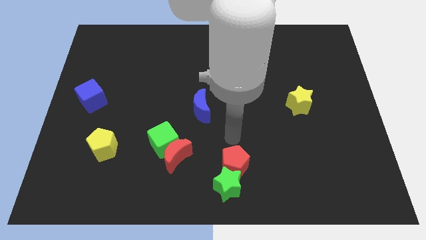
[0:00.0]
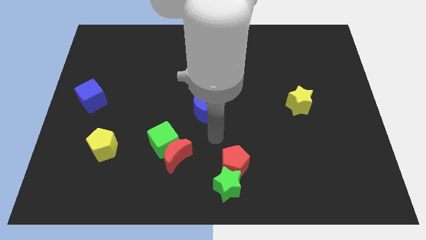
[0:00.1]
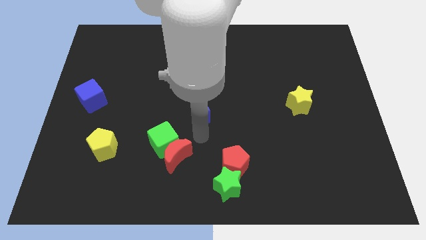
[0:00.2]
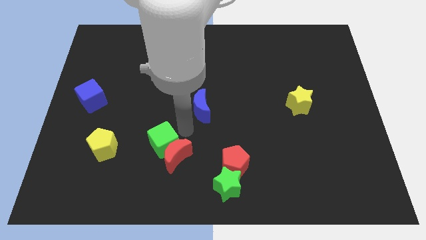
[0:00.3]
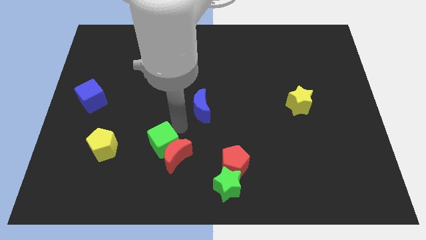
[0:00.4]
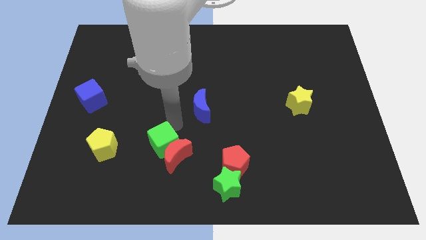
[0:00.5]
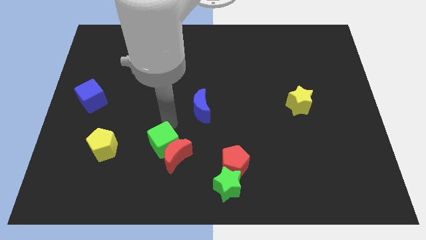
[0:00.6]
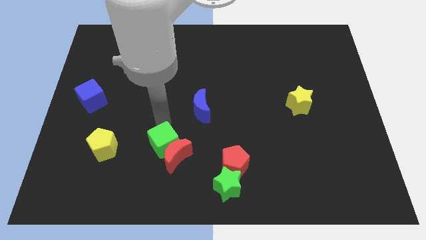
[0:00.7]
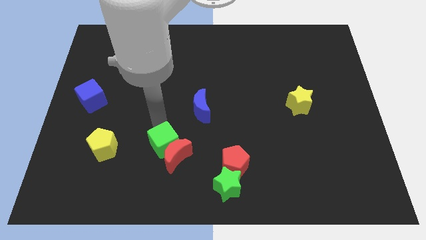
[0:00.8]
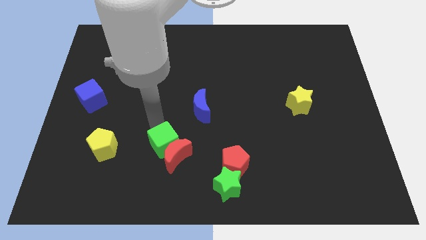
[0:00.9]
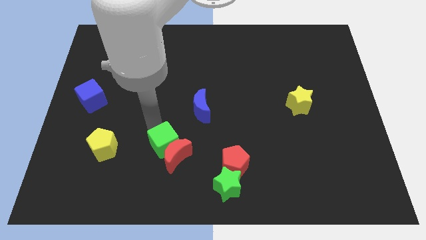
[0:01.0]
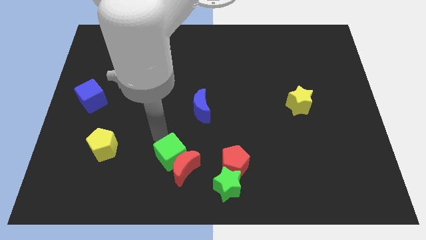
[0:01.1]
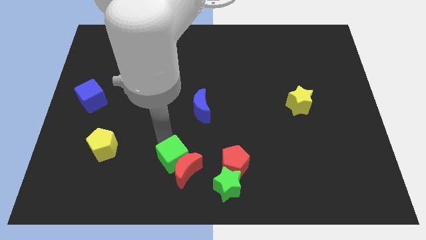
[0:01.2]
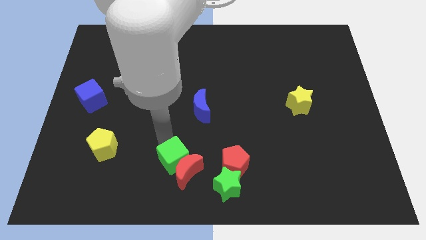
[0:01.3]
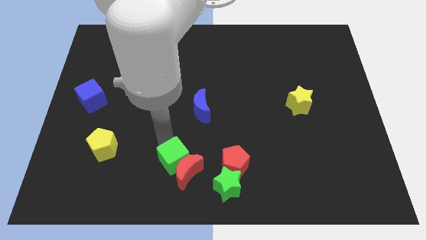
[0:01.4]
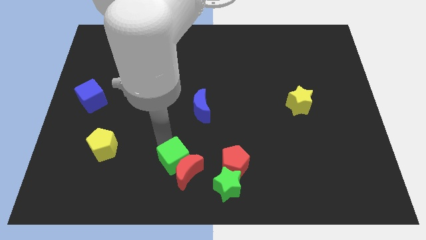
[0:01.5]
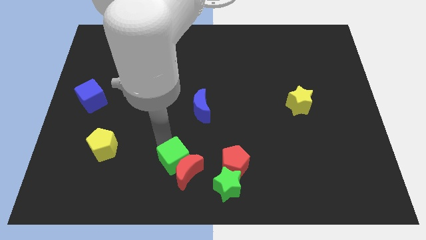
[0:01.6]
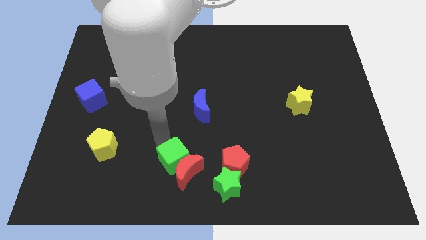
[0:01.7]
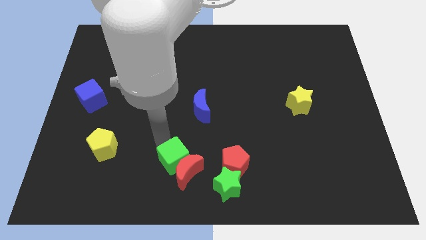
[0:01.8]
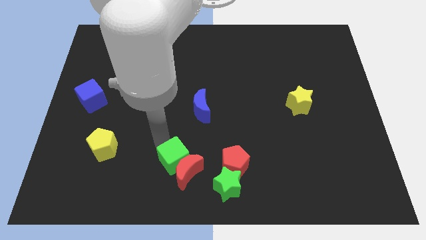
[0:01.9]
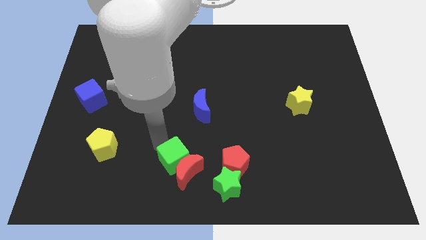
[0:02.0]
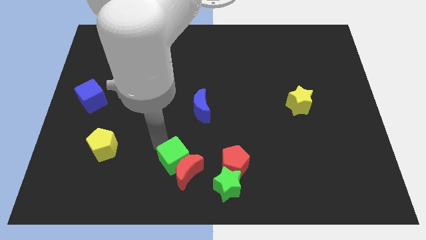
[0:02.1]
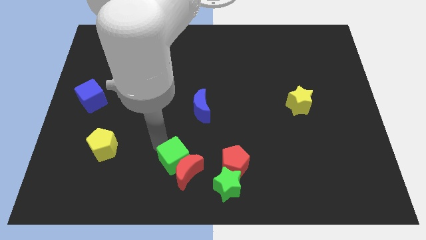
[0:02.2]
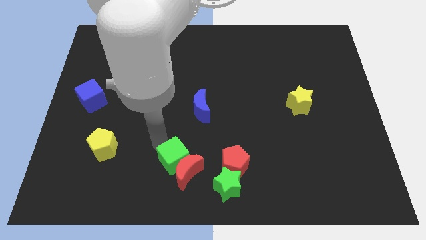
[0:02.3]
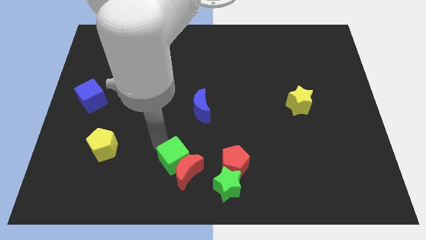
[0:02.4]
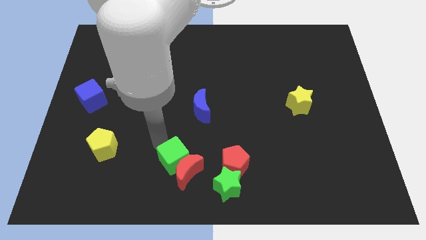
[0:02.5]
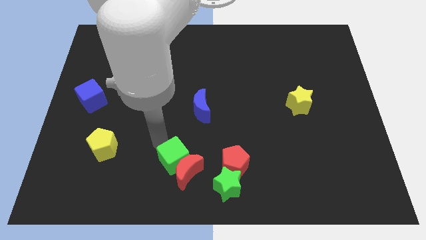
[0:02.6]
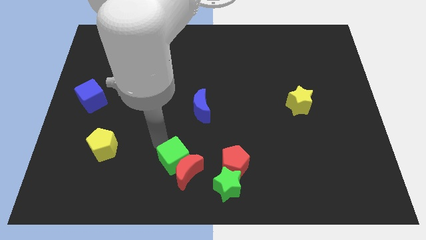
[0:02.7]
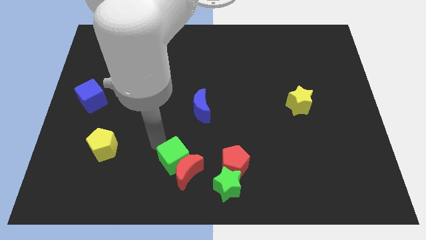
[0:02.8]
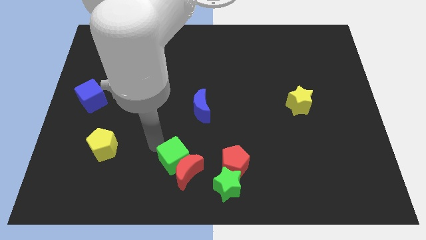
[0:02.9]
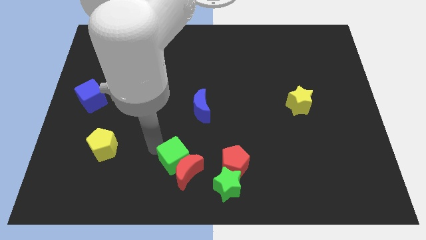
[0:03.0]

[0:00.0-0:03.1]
move the red moon with a green cube close to the green star

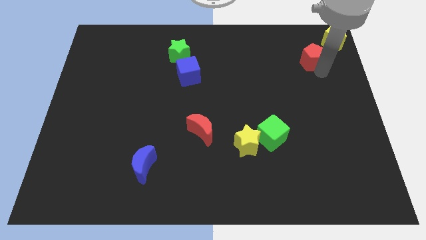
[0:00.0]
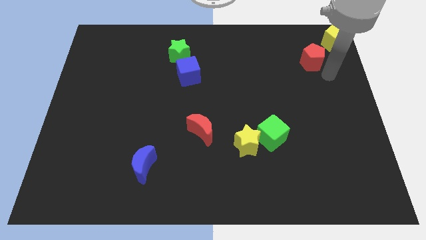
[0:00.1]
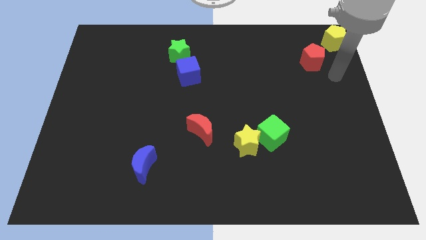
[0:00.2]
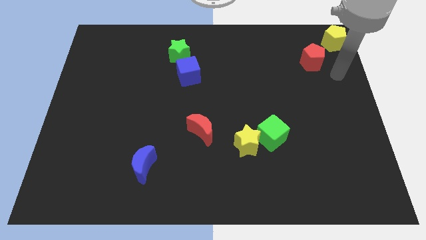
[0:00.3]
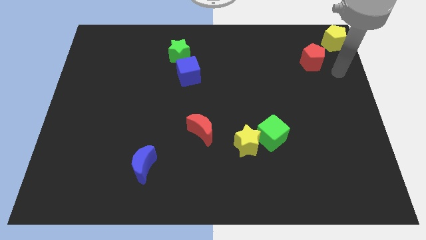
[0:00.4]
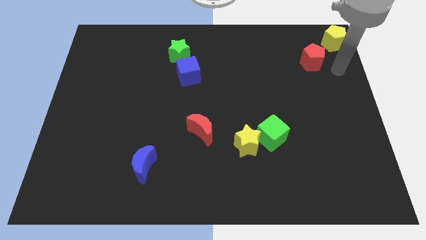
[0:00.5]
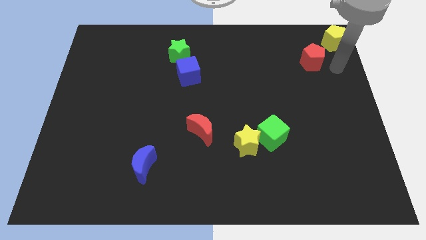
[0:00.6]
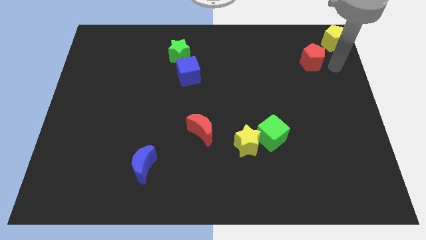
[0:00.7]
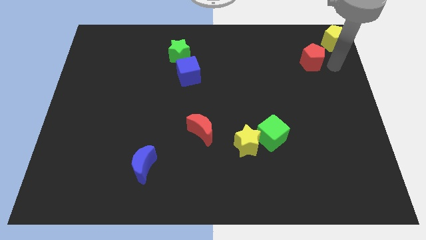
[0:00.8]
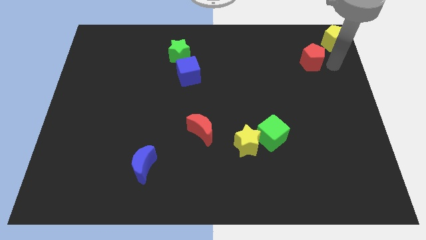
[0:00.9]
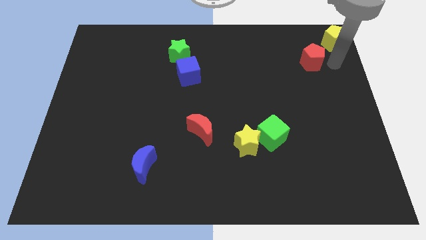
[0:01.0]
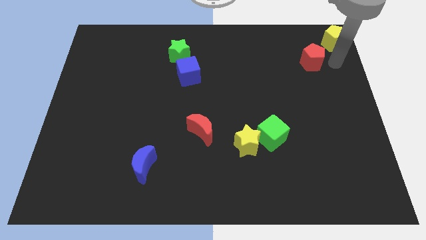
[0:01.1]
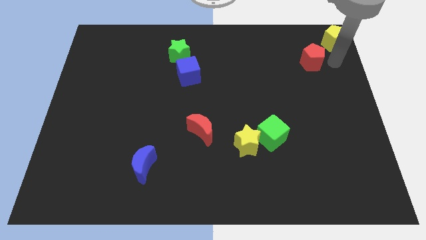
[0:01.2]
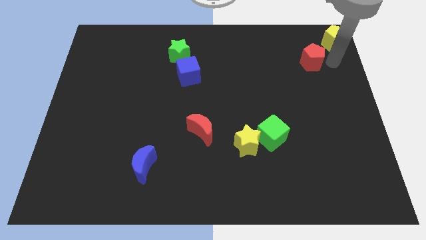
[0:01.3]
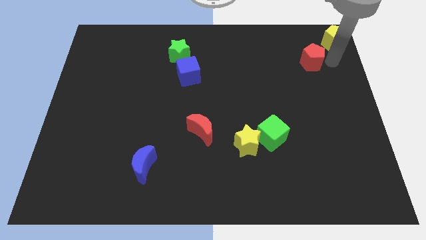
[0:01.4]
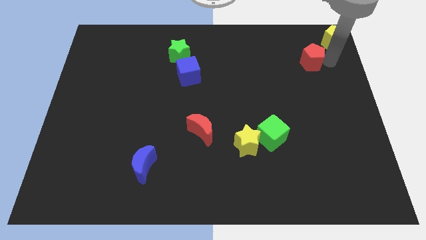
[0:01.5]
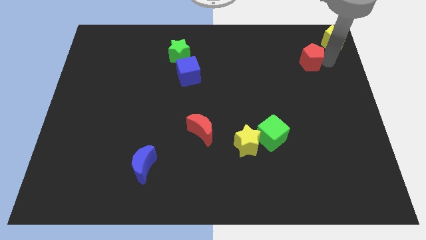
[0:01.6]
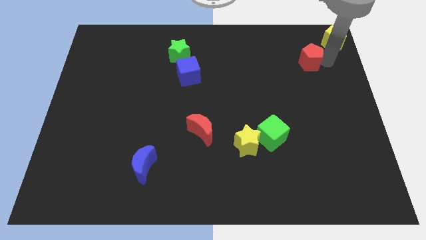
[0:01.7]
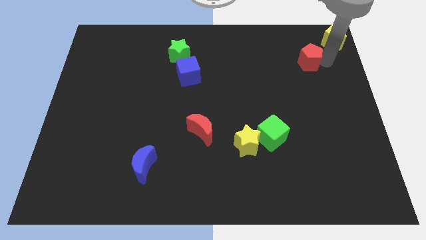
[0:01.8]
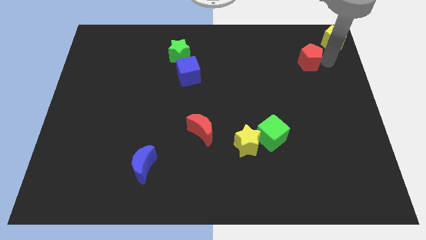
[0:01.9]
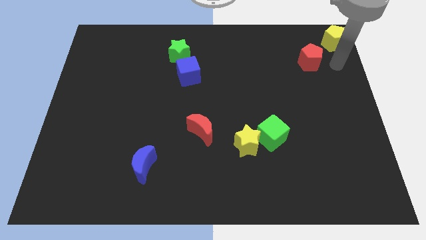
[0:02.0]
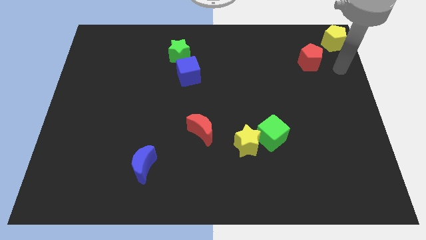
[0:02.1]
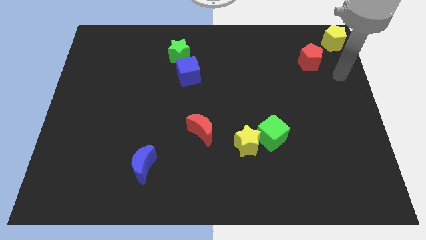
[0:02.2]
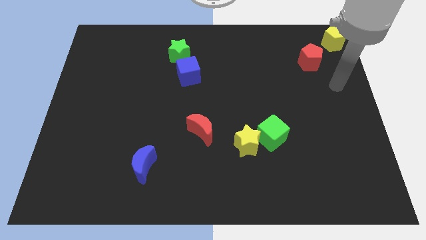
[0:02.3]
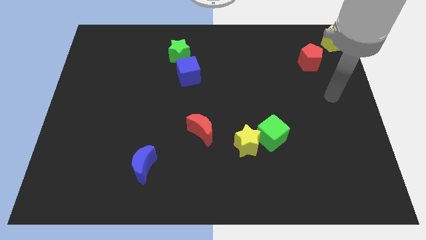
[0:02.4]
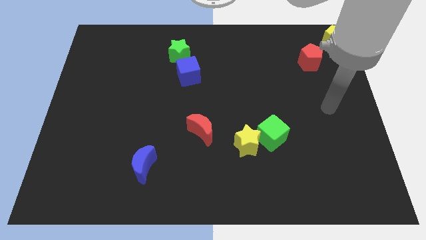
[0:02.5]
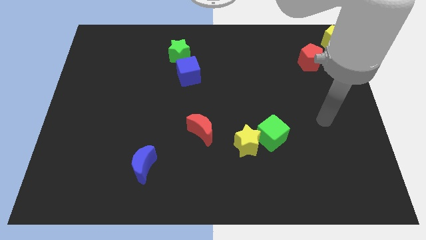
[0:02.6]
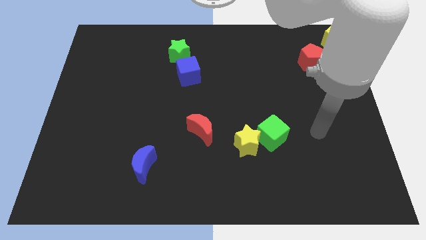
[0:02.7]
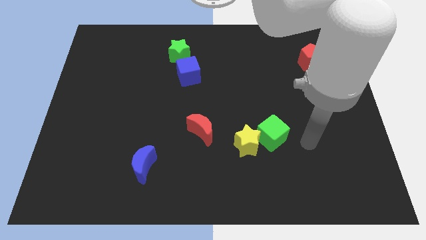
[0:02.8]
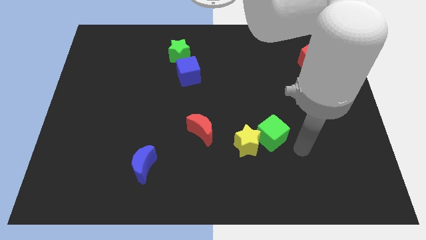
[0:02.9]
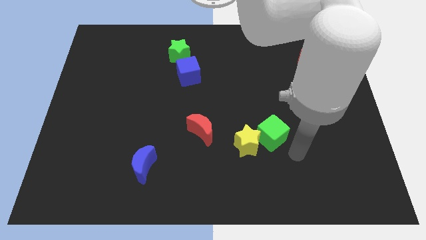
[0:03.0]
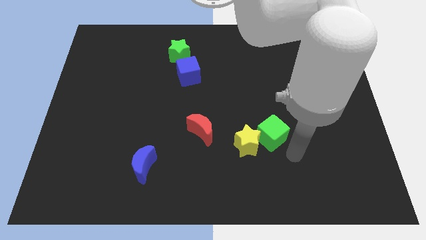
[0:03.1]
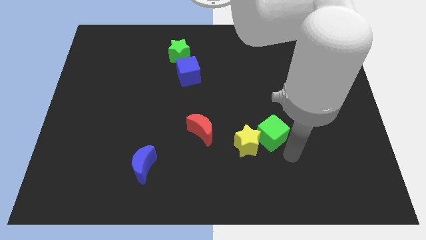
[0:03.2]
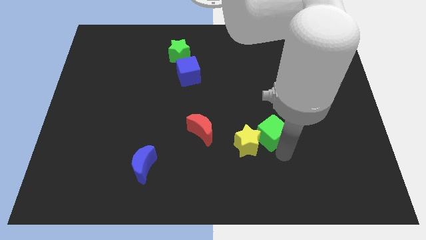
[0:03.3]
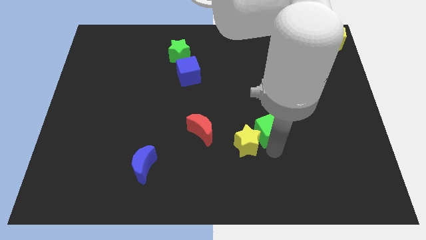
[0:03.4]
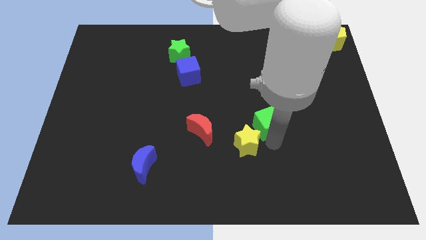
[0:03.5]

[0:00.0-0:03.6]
move the green cube to the top tight of the yellow star

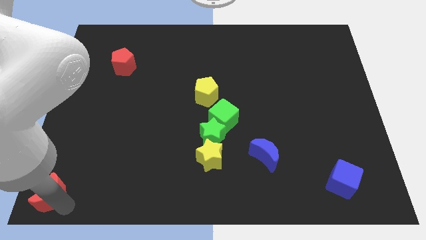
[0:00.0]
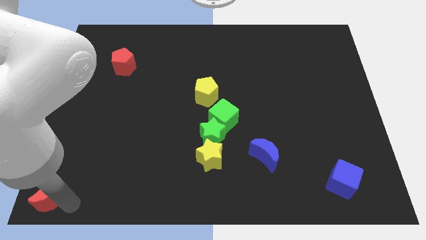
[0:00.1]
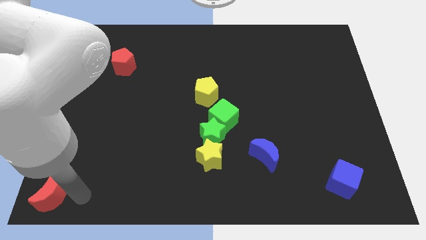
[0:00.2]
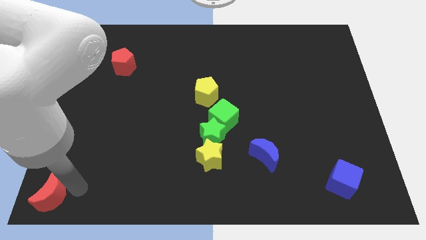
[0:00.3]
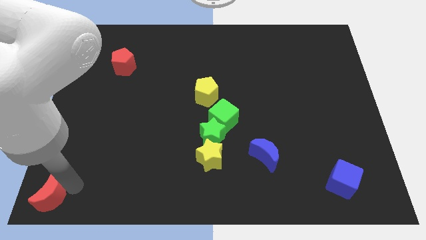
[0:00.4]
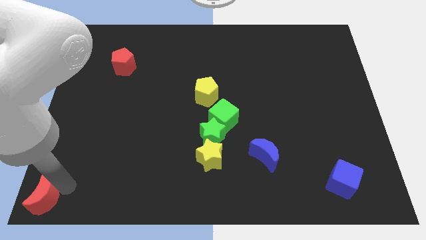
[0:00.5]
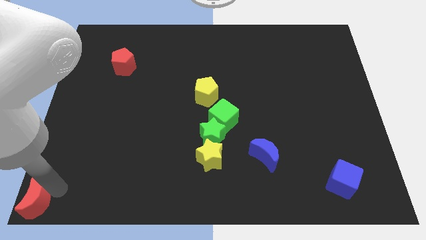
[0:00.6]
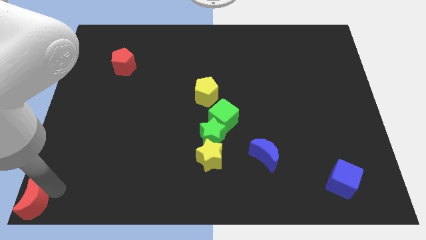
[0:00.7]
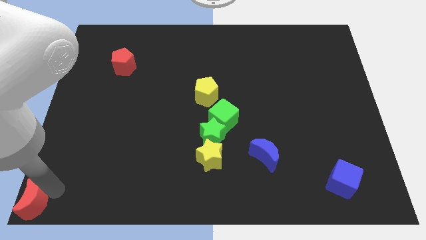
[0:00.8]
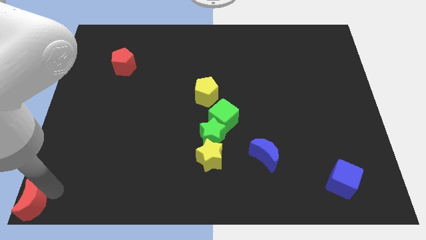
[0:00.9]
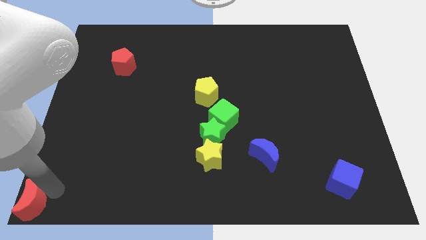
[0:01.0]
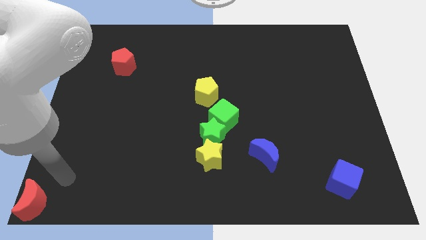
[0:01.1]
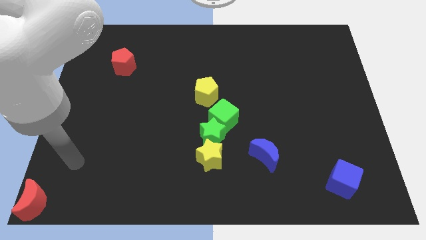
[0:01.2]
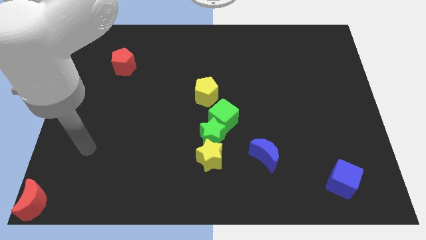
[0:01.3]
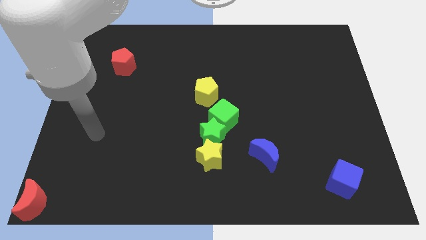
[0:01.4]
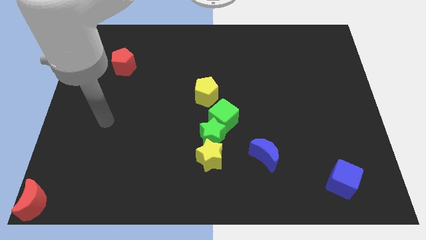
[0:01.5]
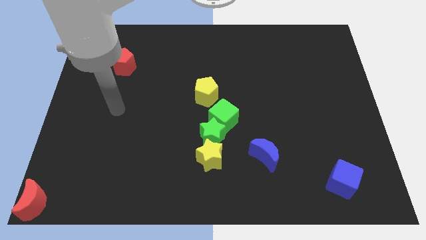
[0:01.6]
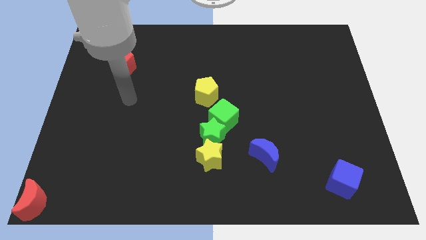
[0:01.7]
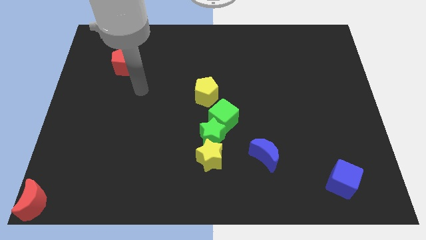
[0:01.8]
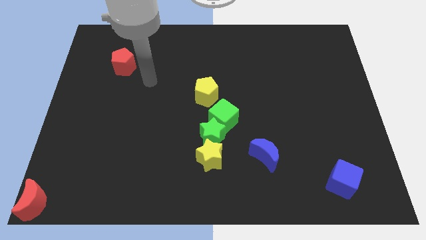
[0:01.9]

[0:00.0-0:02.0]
push the red crescent to the left bottom corner

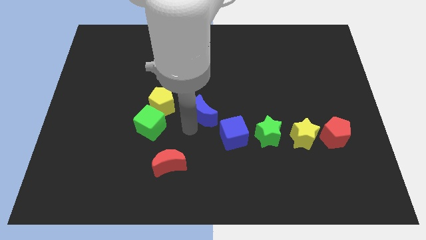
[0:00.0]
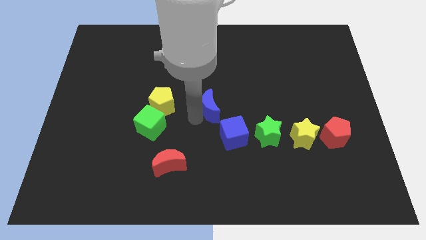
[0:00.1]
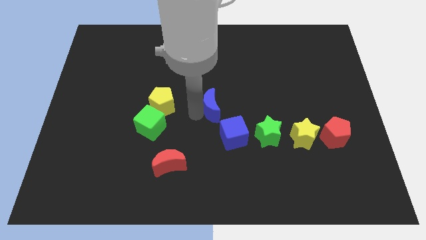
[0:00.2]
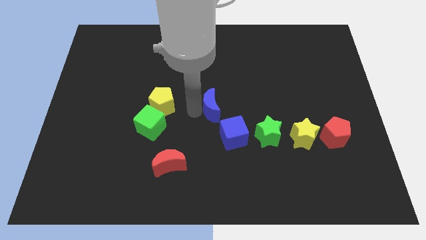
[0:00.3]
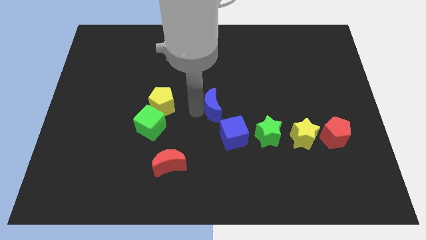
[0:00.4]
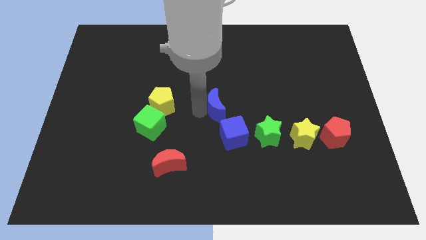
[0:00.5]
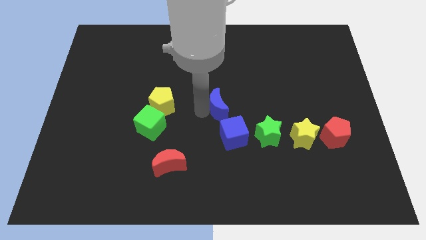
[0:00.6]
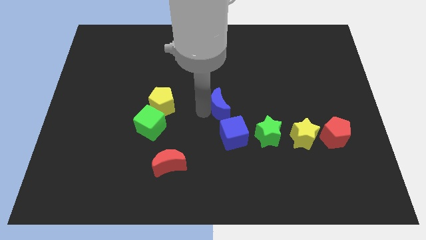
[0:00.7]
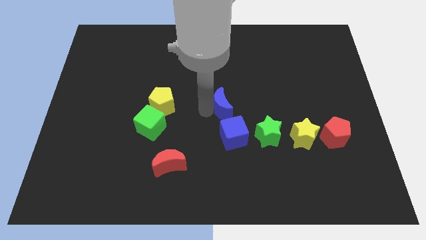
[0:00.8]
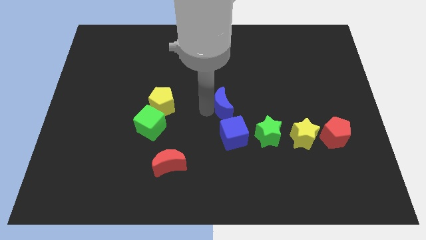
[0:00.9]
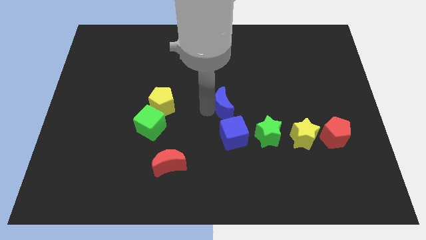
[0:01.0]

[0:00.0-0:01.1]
place blue crescent above blue cube
